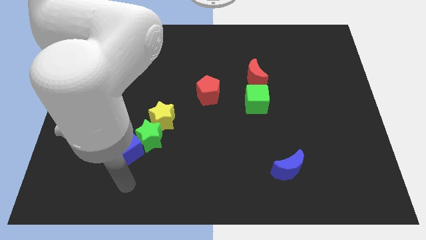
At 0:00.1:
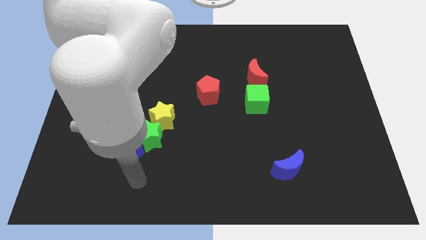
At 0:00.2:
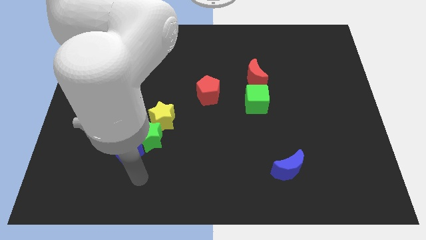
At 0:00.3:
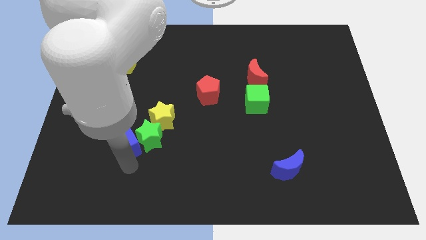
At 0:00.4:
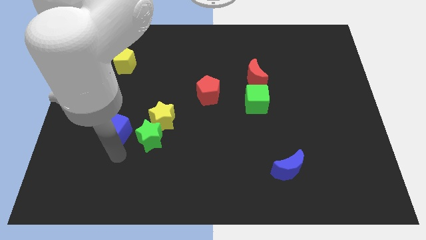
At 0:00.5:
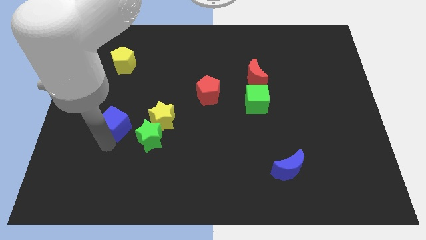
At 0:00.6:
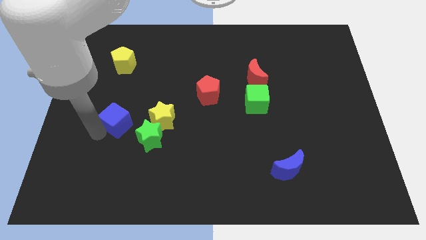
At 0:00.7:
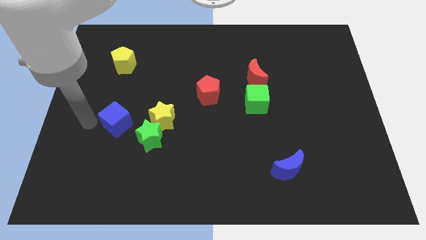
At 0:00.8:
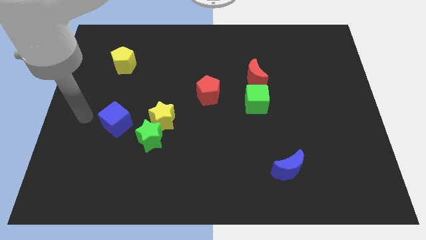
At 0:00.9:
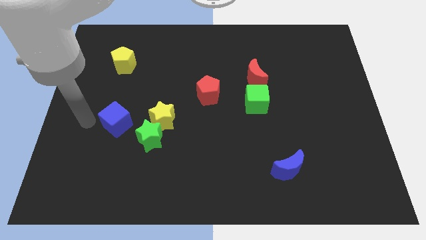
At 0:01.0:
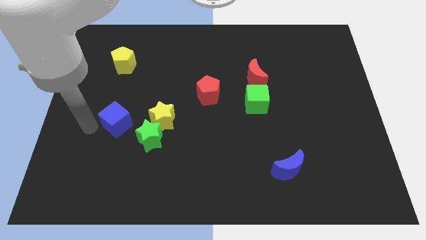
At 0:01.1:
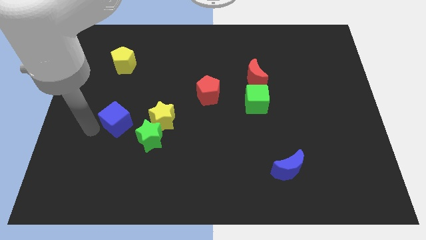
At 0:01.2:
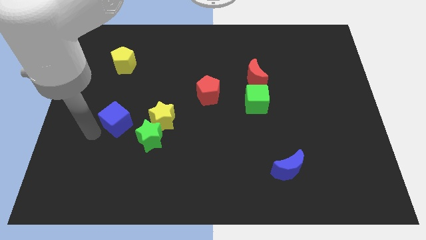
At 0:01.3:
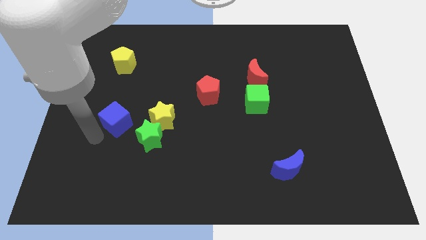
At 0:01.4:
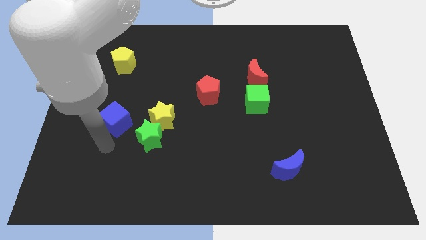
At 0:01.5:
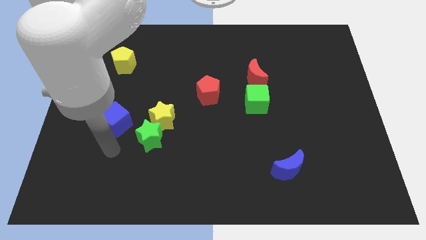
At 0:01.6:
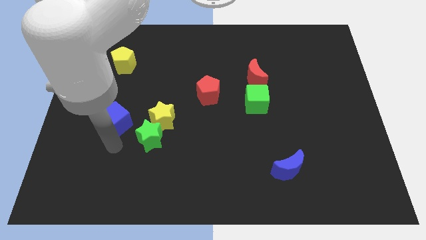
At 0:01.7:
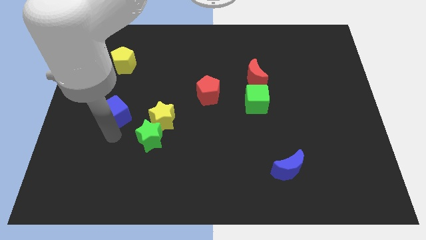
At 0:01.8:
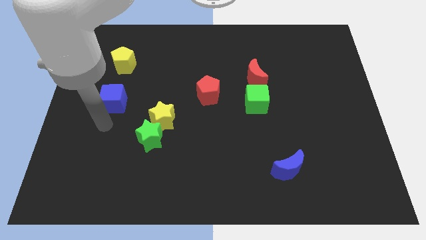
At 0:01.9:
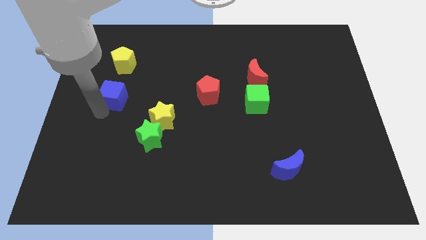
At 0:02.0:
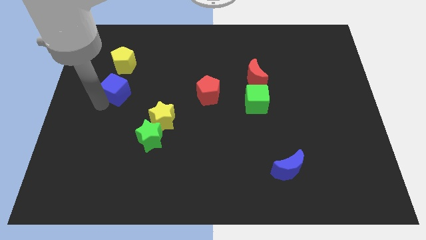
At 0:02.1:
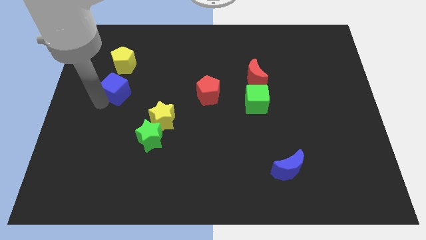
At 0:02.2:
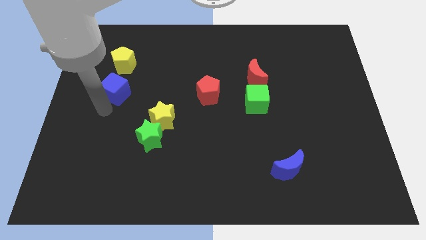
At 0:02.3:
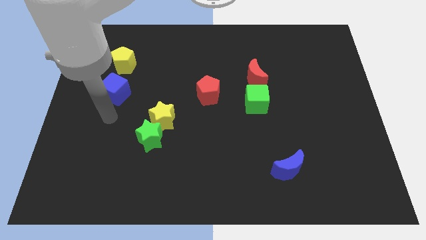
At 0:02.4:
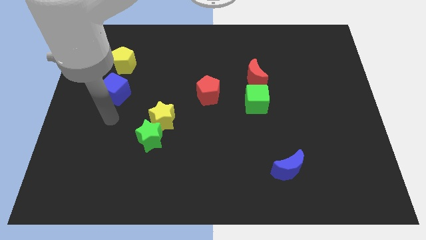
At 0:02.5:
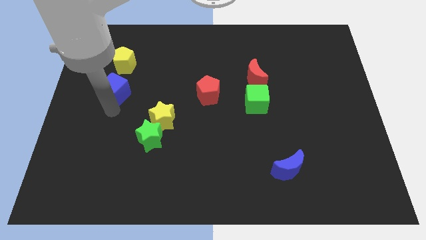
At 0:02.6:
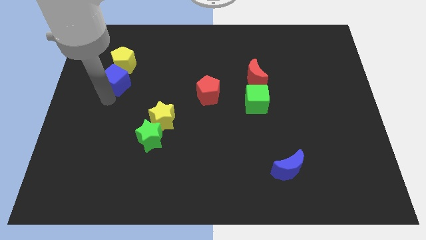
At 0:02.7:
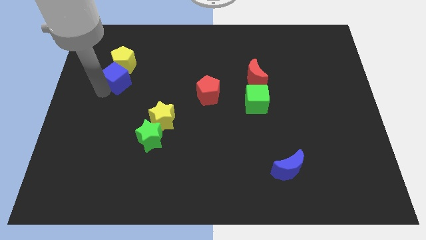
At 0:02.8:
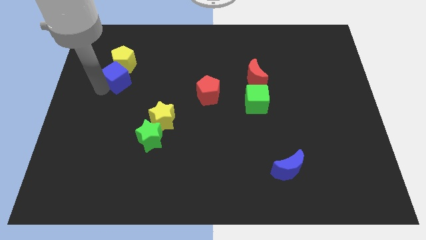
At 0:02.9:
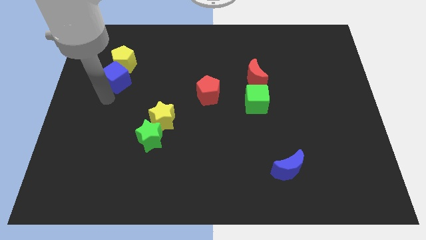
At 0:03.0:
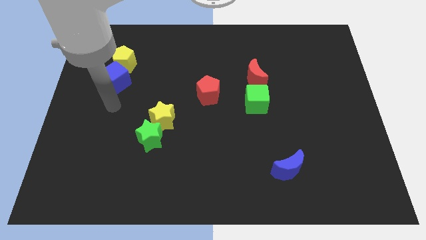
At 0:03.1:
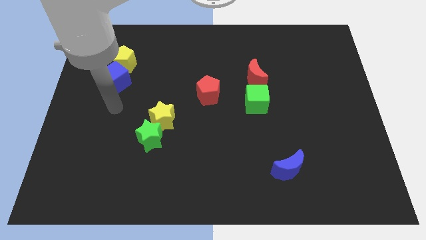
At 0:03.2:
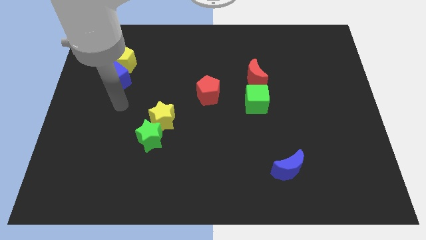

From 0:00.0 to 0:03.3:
push the blue cube into the yellow pentagon from the bottom

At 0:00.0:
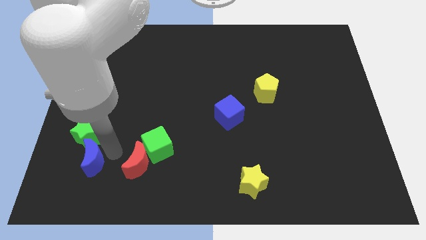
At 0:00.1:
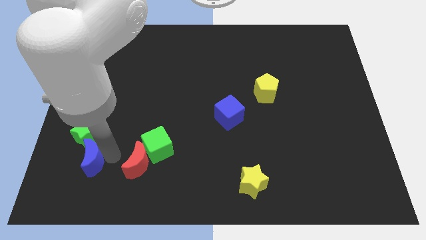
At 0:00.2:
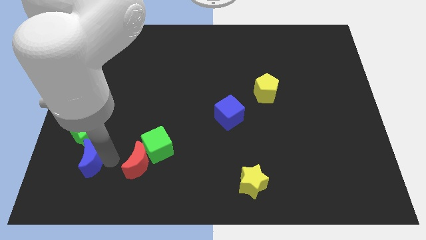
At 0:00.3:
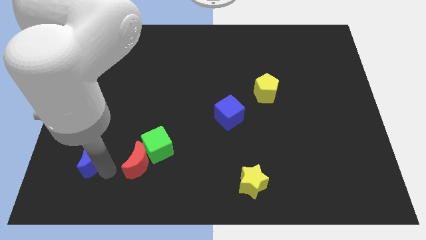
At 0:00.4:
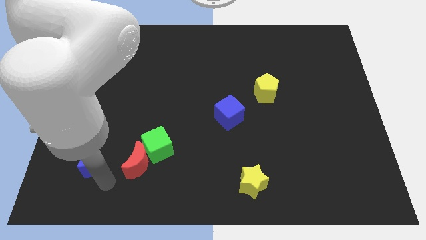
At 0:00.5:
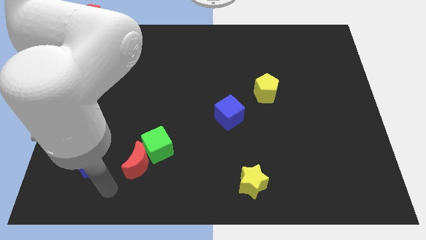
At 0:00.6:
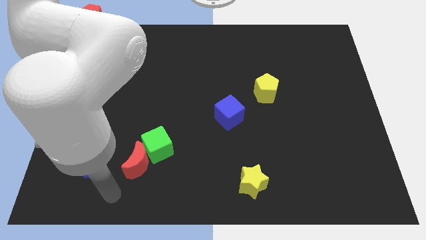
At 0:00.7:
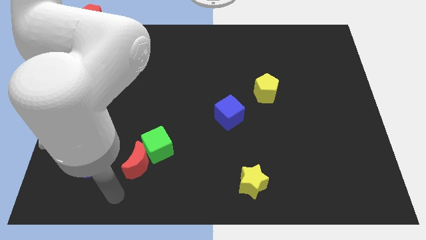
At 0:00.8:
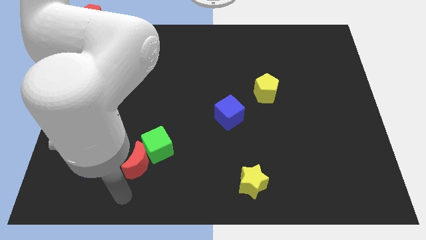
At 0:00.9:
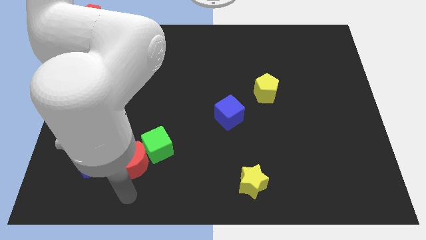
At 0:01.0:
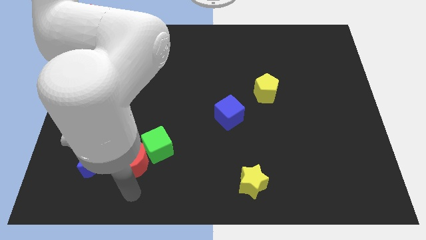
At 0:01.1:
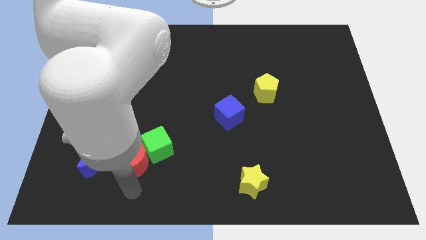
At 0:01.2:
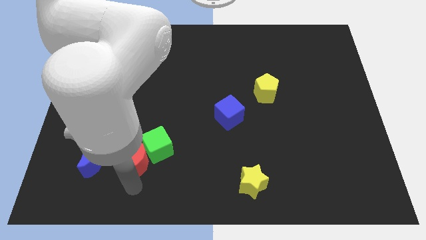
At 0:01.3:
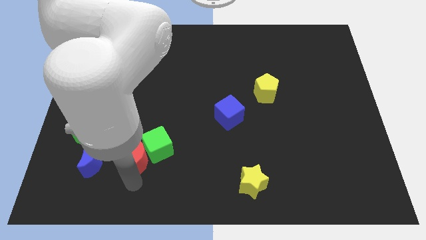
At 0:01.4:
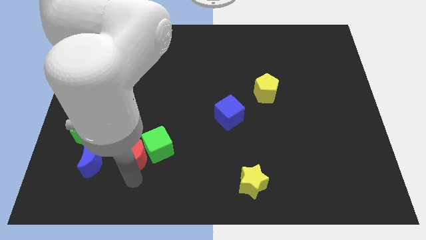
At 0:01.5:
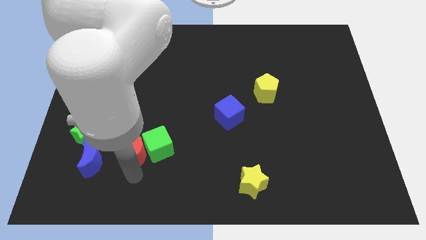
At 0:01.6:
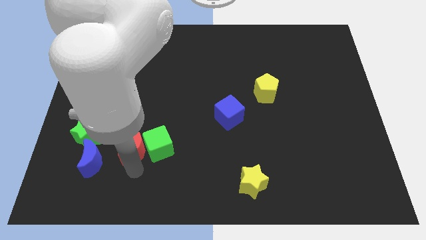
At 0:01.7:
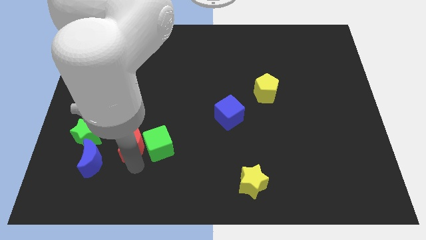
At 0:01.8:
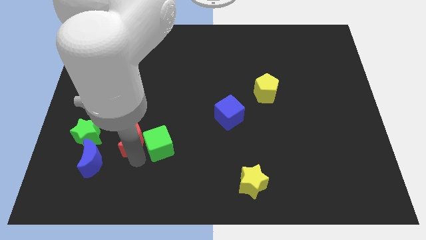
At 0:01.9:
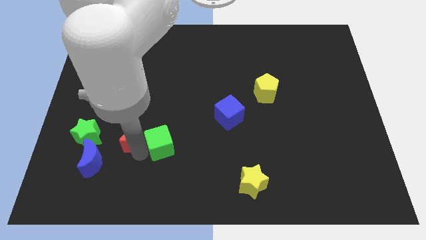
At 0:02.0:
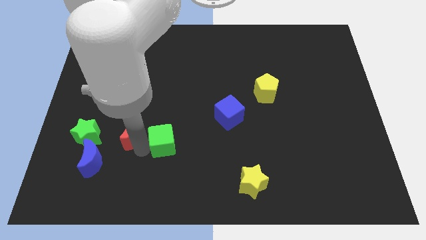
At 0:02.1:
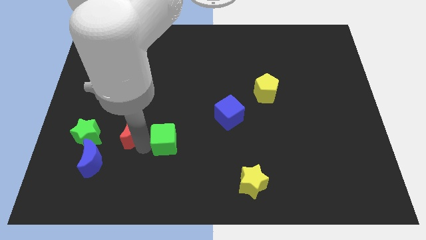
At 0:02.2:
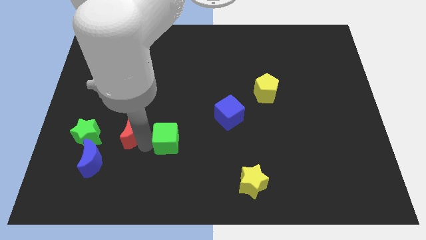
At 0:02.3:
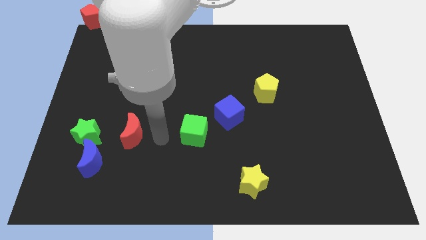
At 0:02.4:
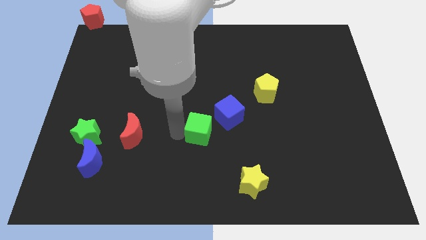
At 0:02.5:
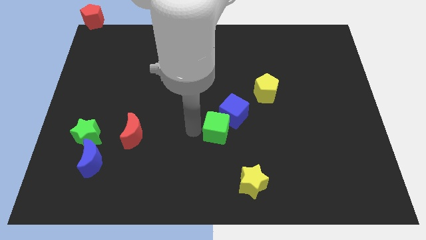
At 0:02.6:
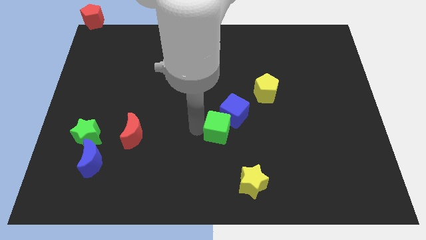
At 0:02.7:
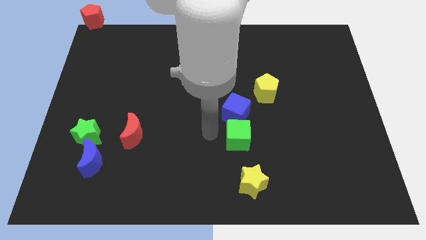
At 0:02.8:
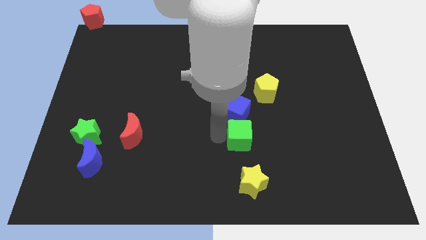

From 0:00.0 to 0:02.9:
push green cube below blue cube

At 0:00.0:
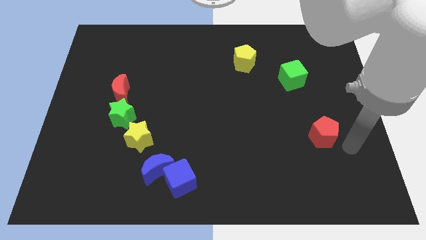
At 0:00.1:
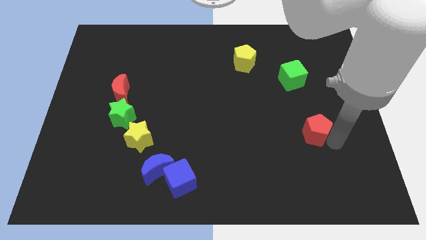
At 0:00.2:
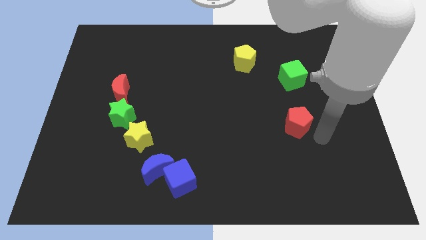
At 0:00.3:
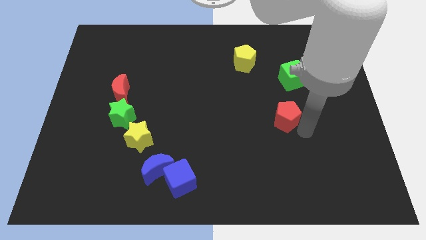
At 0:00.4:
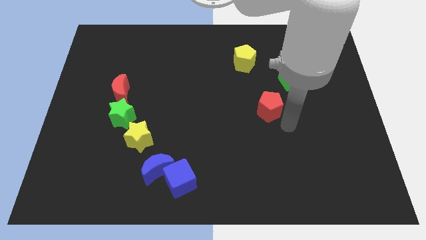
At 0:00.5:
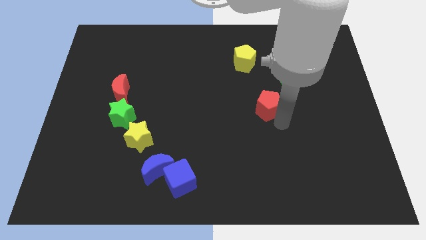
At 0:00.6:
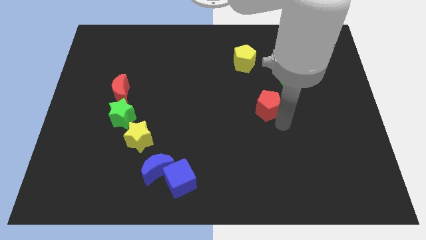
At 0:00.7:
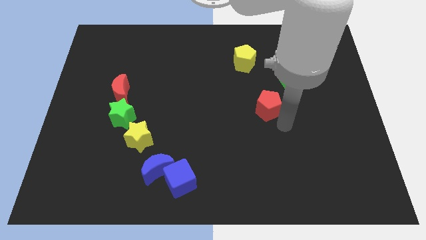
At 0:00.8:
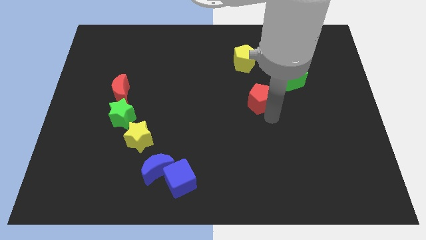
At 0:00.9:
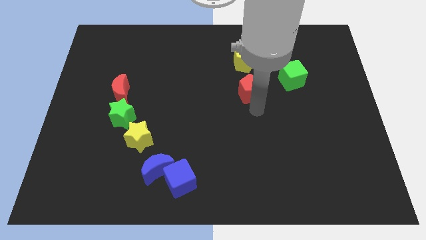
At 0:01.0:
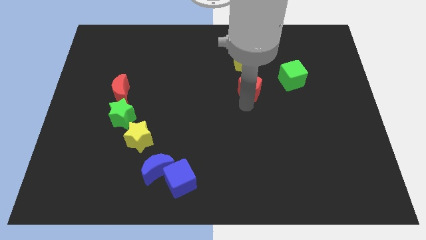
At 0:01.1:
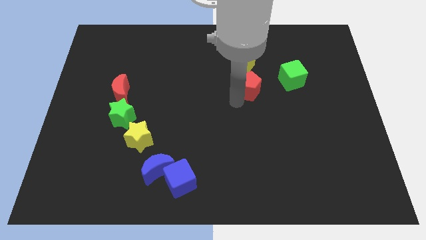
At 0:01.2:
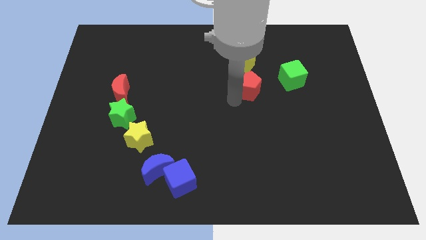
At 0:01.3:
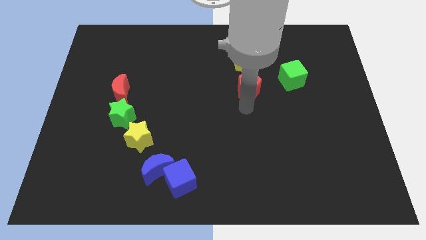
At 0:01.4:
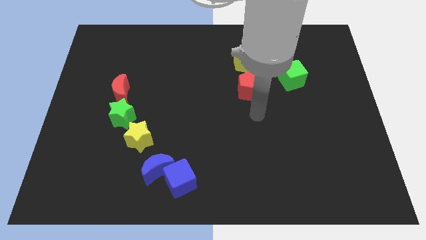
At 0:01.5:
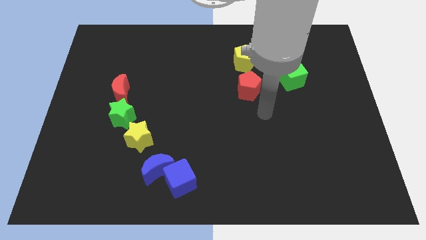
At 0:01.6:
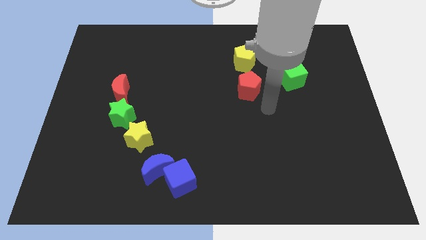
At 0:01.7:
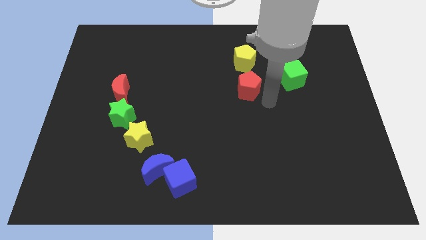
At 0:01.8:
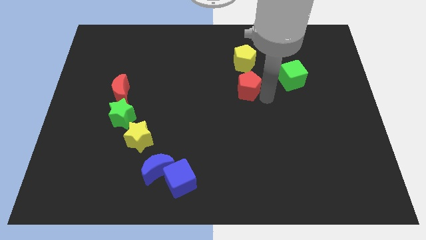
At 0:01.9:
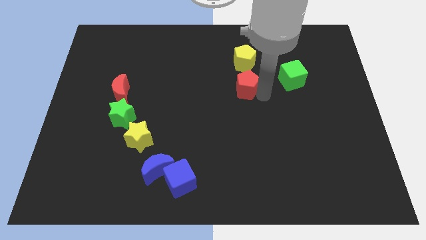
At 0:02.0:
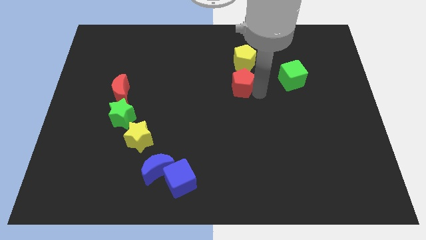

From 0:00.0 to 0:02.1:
place the red pentagon to the left side of green cube

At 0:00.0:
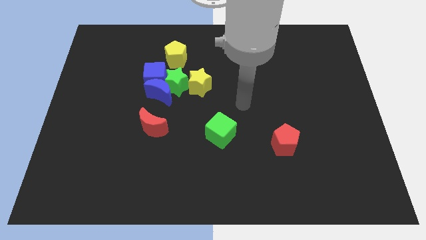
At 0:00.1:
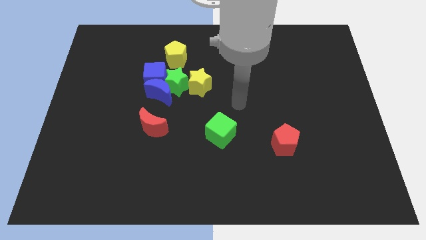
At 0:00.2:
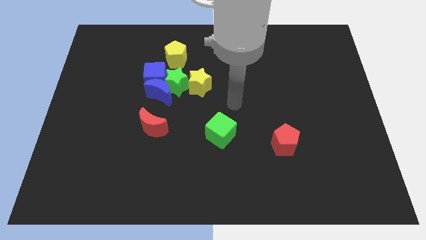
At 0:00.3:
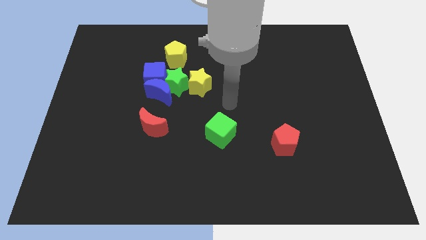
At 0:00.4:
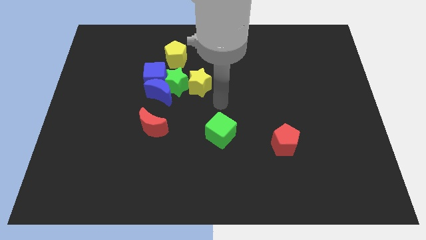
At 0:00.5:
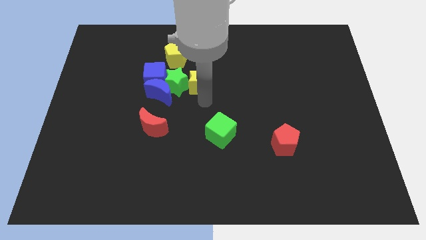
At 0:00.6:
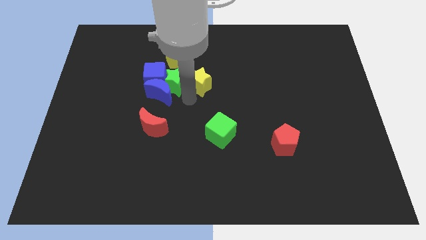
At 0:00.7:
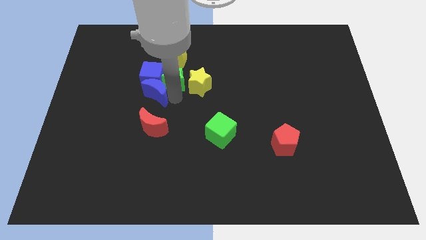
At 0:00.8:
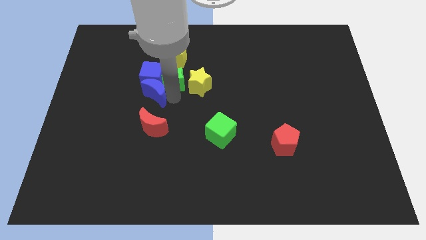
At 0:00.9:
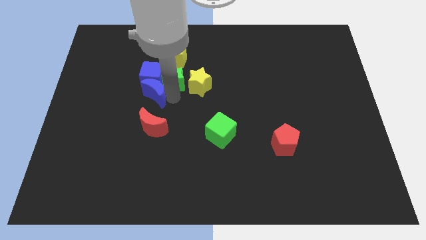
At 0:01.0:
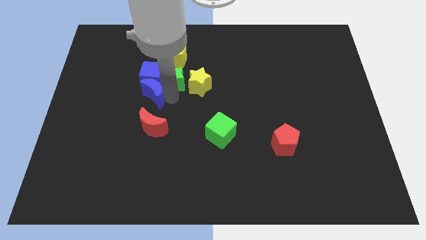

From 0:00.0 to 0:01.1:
touch the right side of the blue crescent
